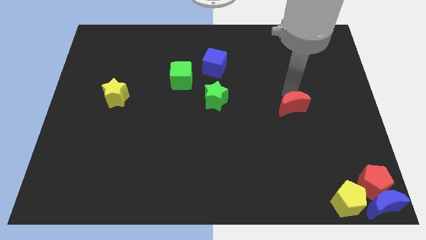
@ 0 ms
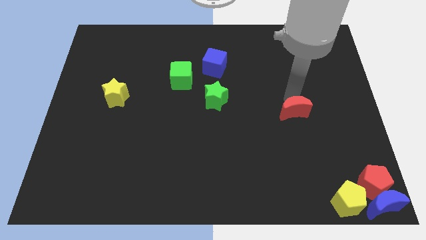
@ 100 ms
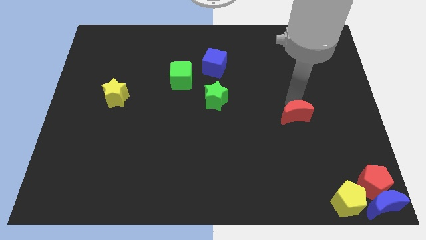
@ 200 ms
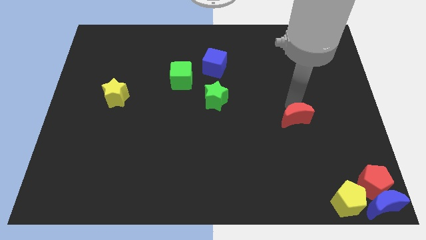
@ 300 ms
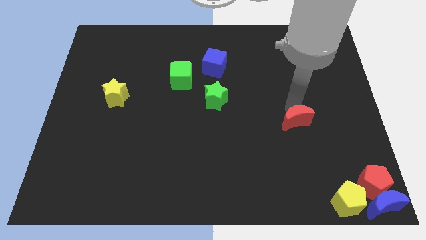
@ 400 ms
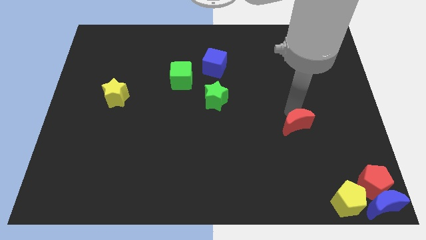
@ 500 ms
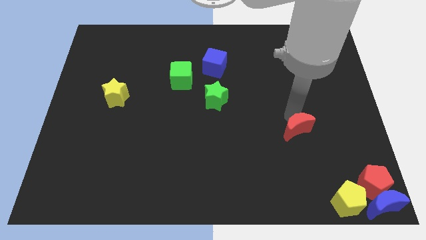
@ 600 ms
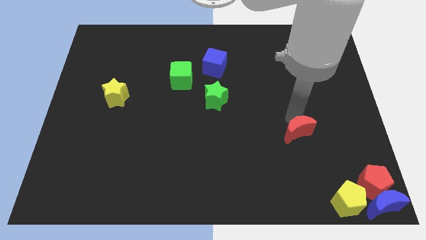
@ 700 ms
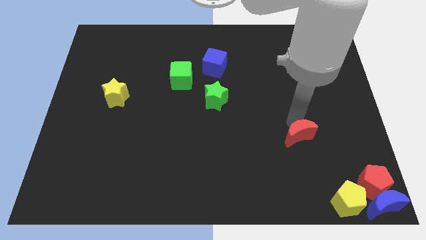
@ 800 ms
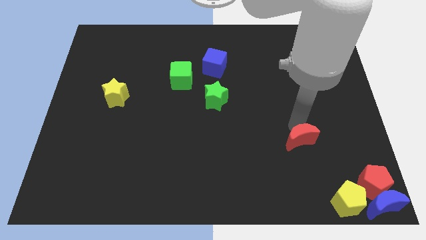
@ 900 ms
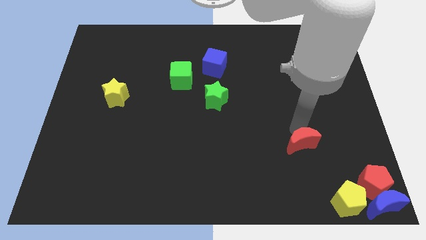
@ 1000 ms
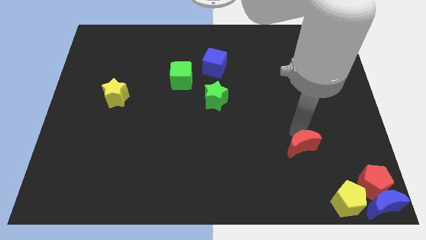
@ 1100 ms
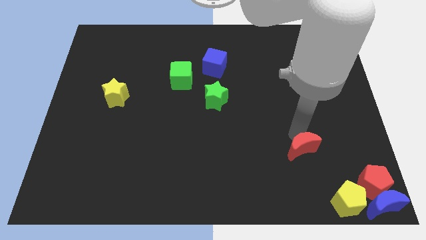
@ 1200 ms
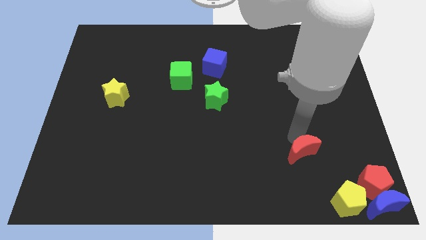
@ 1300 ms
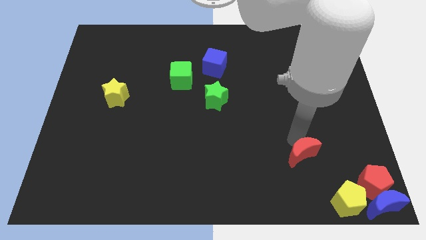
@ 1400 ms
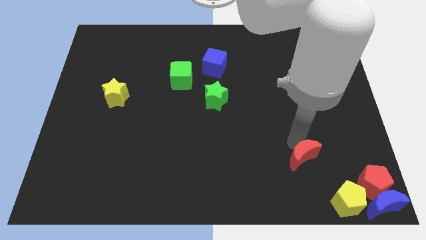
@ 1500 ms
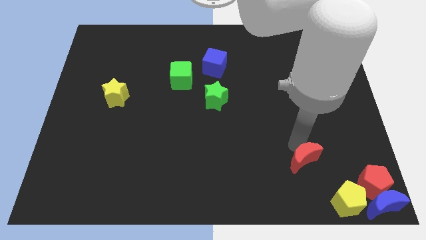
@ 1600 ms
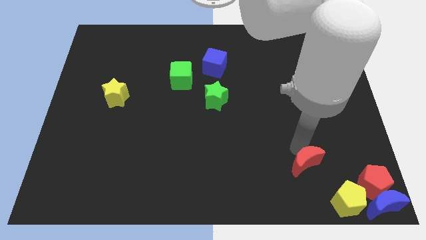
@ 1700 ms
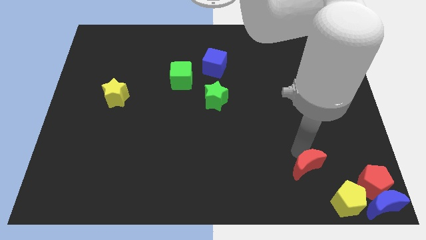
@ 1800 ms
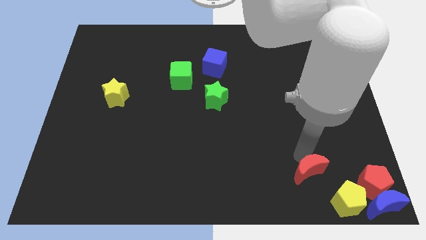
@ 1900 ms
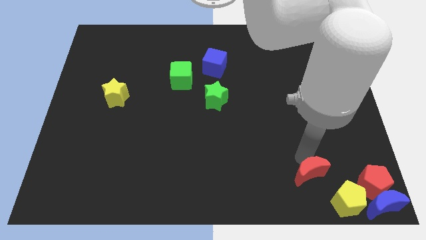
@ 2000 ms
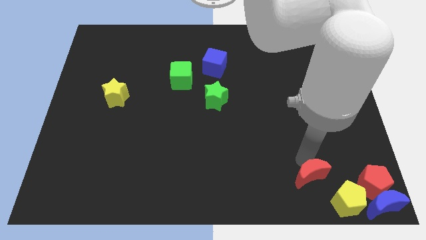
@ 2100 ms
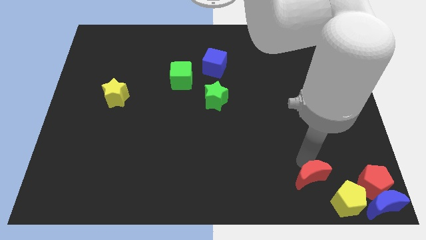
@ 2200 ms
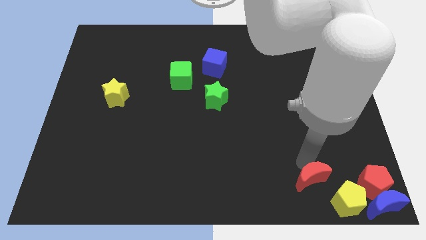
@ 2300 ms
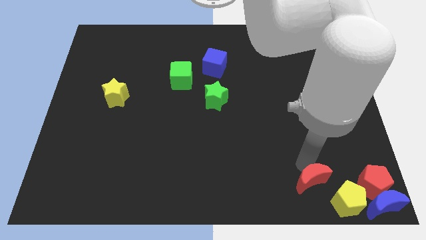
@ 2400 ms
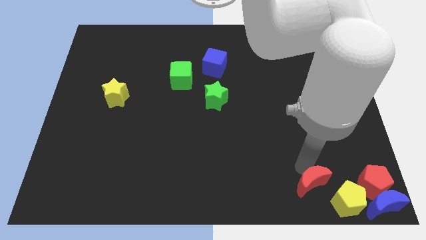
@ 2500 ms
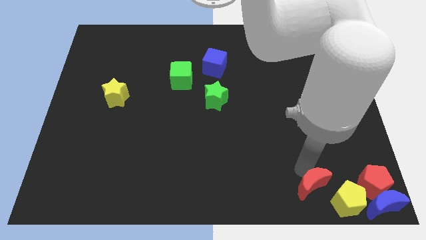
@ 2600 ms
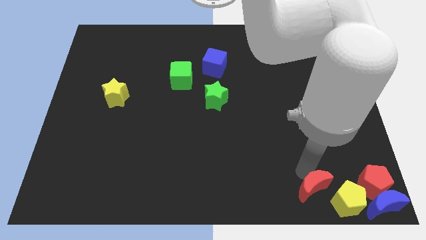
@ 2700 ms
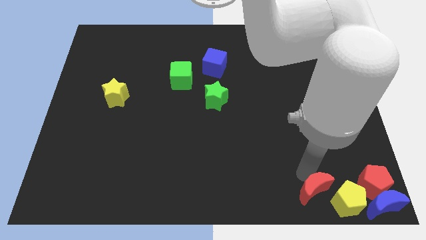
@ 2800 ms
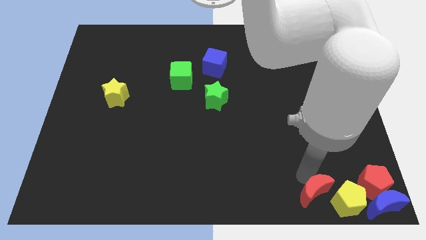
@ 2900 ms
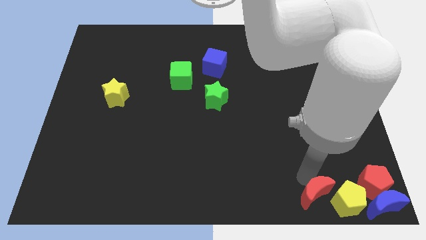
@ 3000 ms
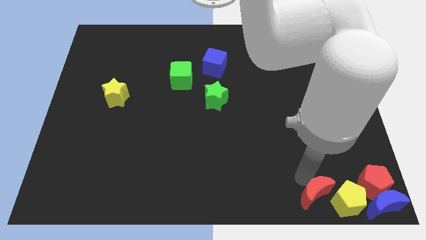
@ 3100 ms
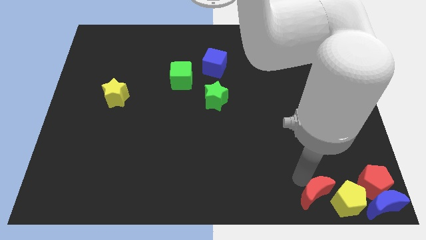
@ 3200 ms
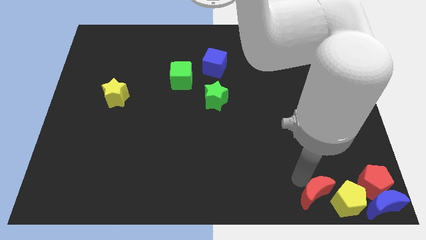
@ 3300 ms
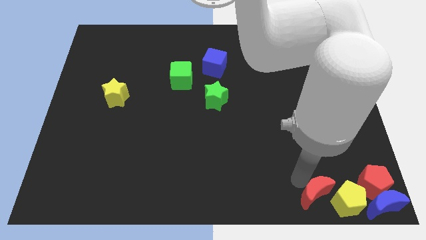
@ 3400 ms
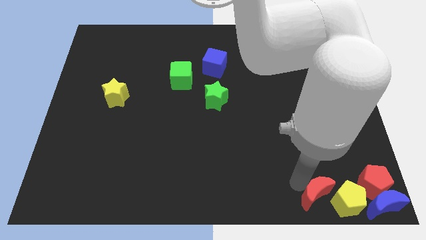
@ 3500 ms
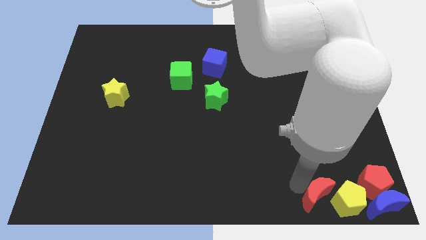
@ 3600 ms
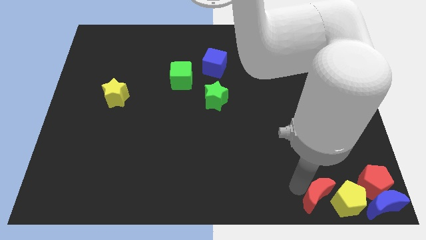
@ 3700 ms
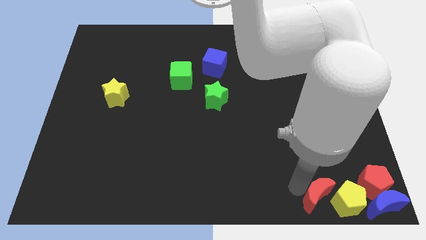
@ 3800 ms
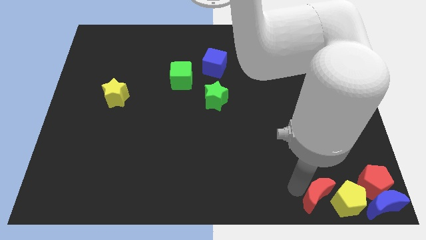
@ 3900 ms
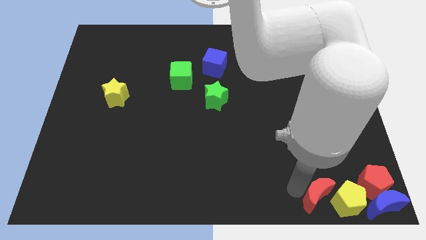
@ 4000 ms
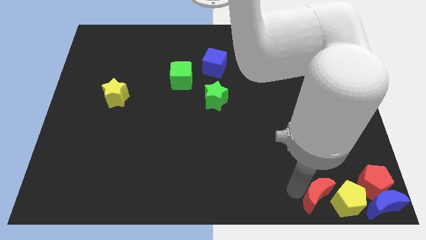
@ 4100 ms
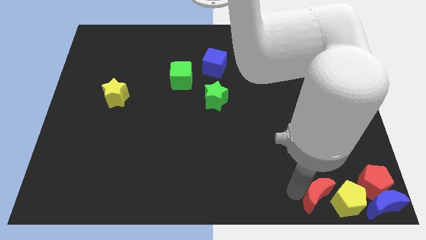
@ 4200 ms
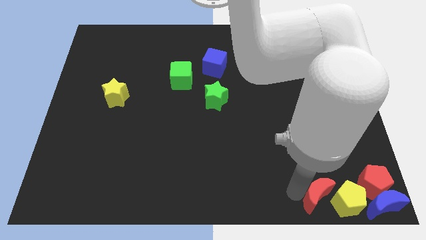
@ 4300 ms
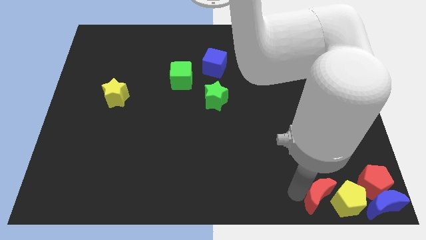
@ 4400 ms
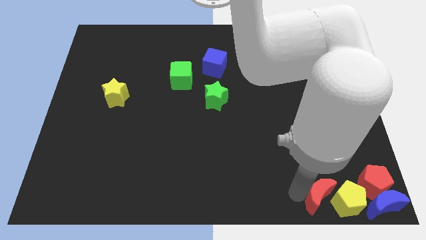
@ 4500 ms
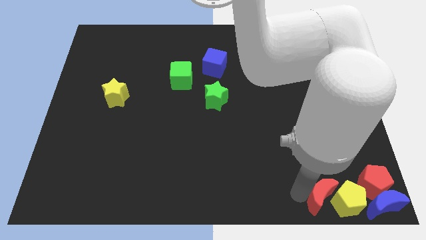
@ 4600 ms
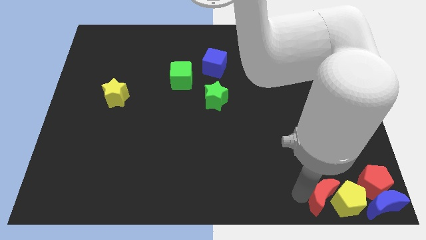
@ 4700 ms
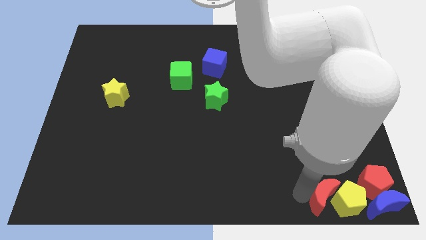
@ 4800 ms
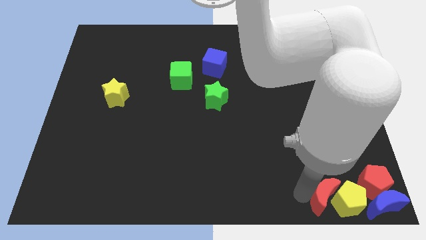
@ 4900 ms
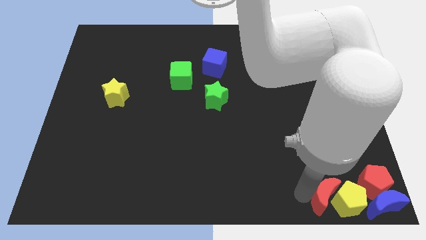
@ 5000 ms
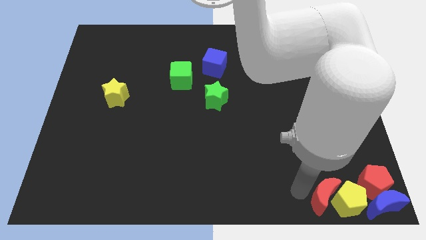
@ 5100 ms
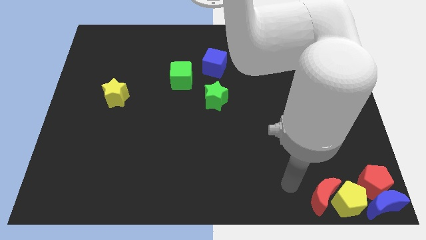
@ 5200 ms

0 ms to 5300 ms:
move the red crescent close to the yellow pentagon

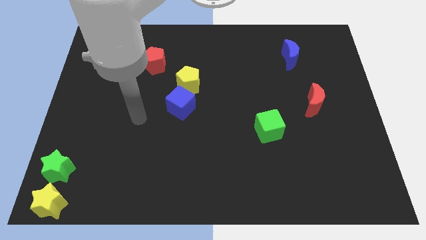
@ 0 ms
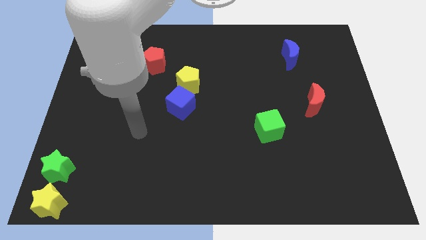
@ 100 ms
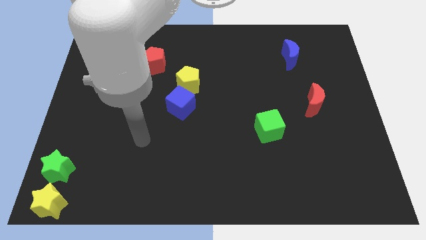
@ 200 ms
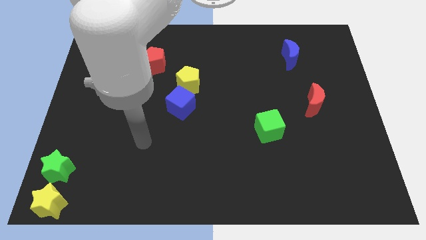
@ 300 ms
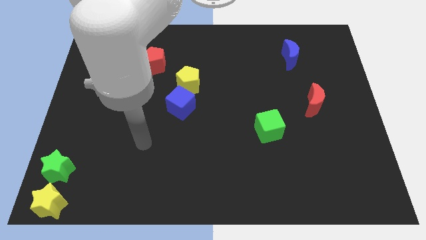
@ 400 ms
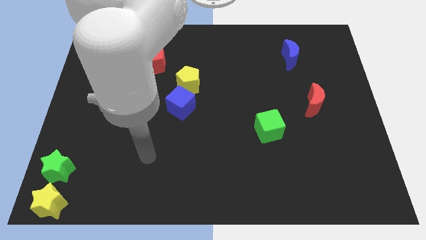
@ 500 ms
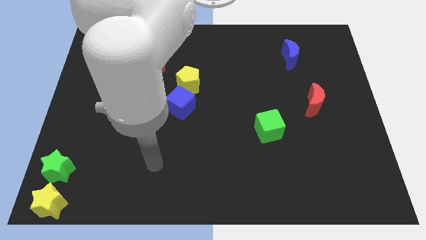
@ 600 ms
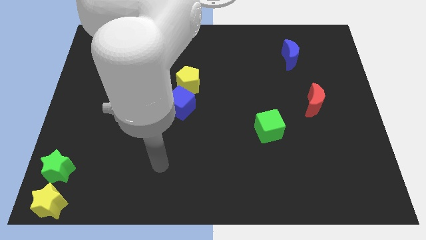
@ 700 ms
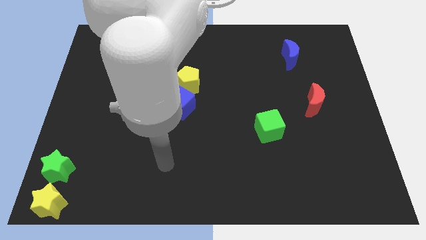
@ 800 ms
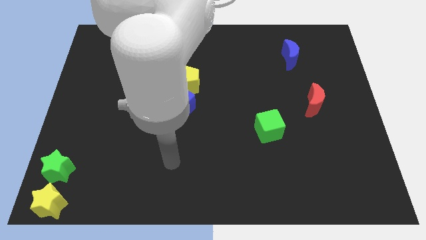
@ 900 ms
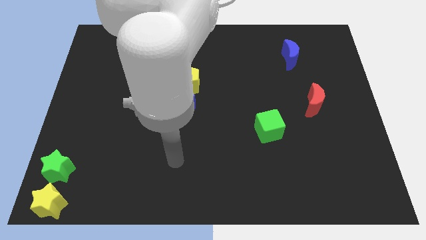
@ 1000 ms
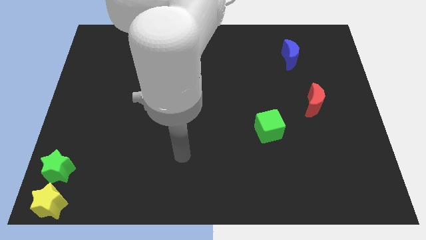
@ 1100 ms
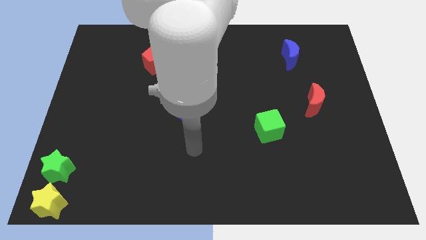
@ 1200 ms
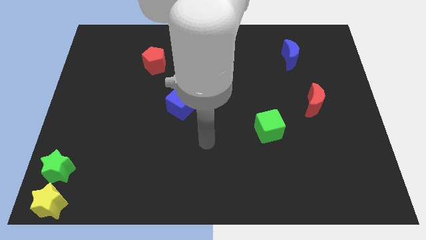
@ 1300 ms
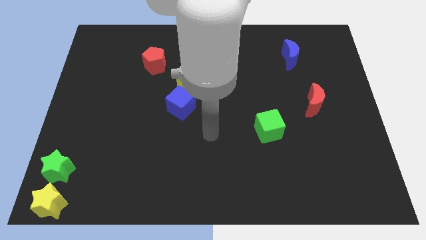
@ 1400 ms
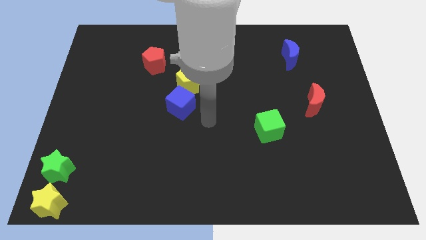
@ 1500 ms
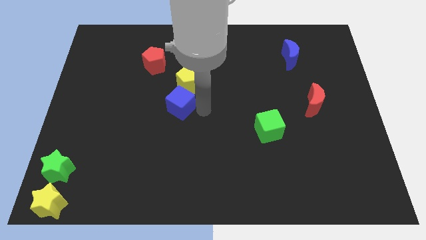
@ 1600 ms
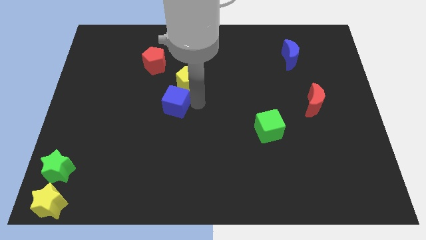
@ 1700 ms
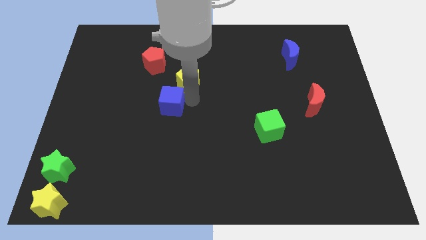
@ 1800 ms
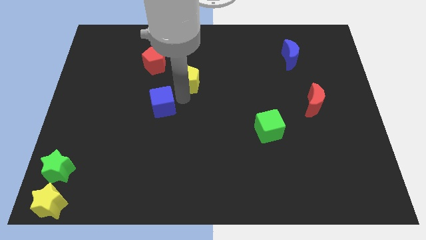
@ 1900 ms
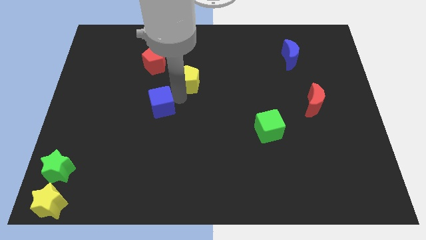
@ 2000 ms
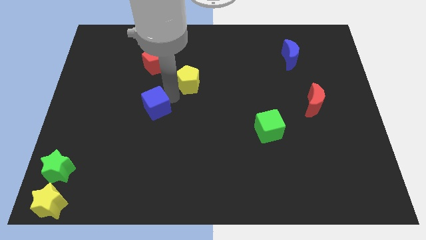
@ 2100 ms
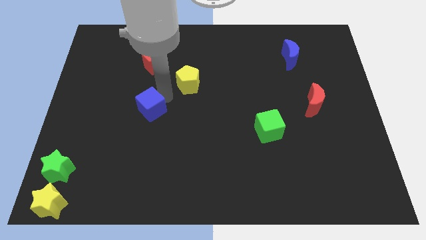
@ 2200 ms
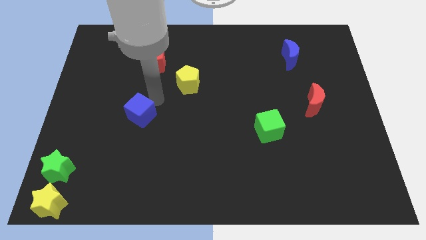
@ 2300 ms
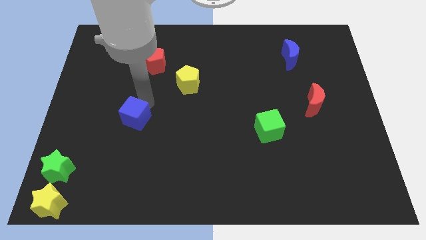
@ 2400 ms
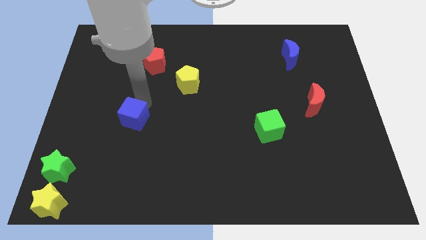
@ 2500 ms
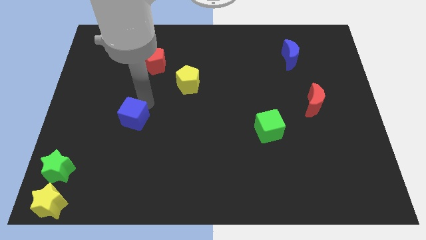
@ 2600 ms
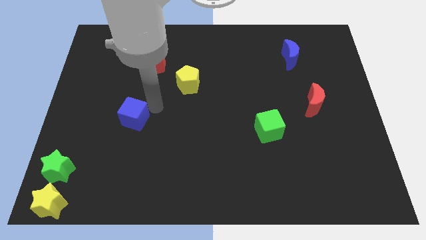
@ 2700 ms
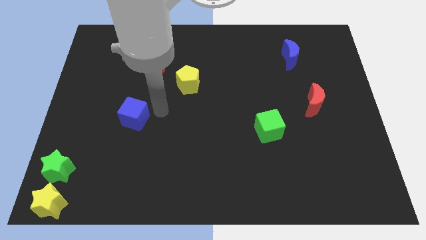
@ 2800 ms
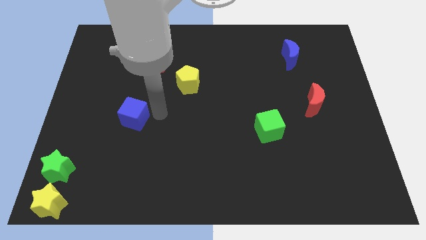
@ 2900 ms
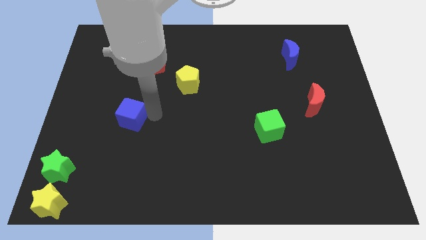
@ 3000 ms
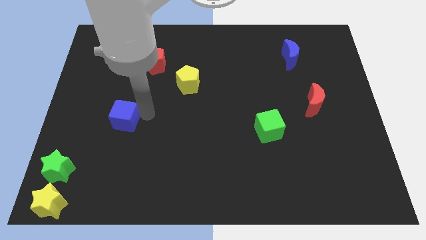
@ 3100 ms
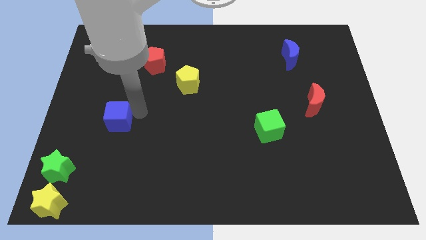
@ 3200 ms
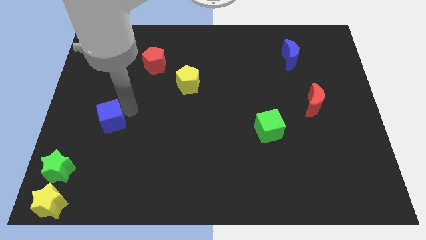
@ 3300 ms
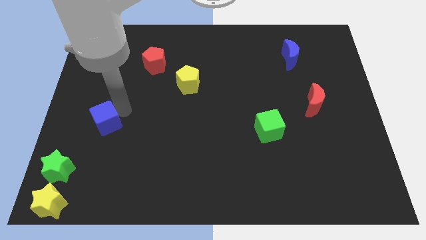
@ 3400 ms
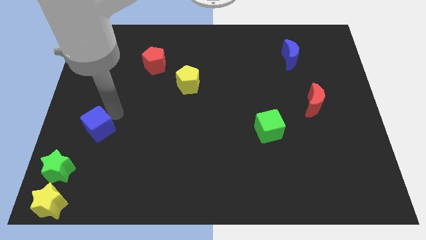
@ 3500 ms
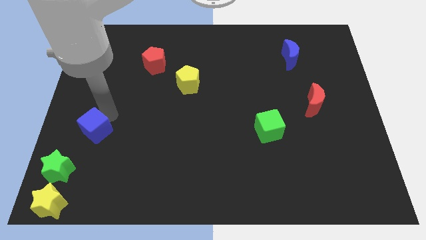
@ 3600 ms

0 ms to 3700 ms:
move the blue cube to the top right of the green star

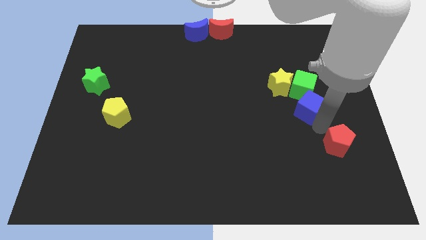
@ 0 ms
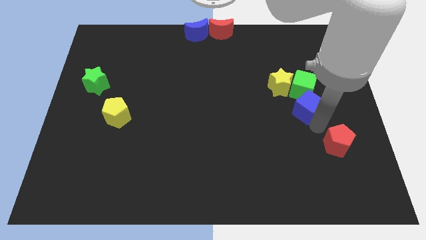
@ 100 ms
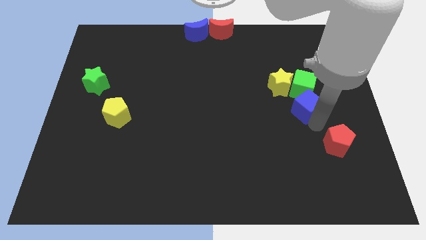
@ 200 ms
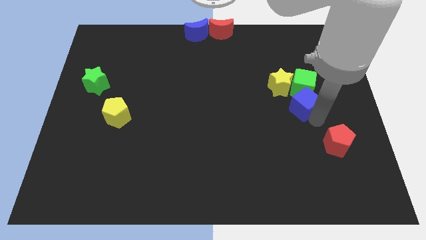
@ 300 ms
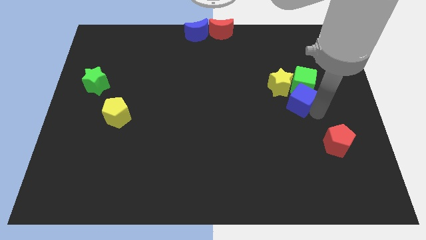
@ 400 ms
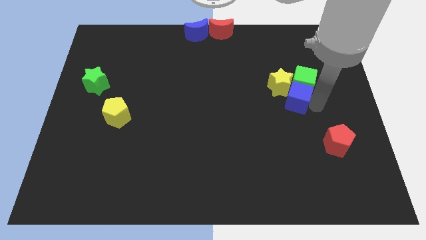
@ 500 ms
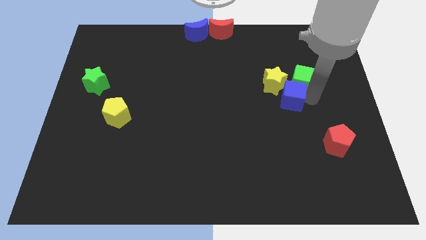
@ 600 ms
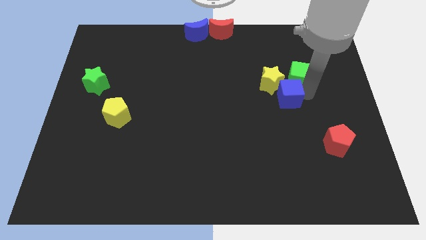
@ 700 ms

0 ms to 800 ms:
push the blue cube into the group of blocks
